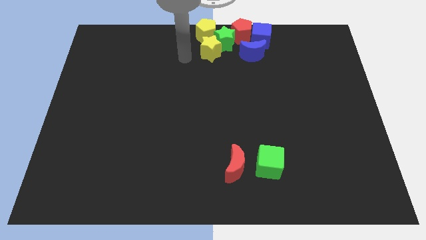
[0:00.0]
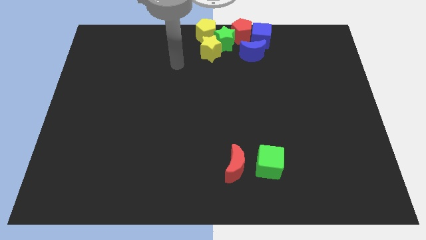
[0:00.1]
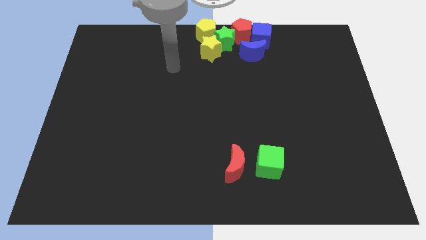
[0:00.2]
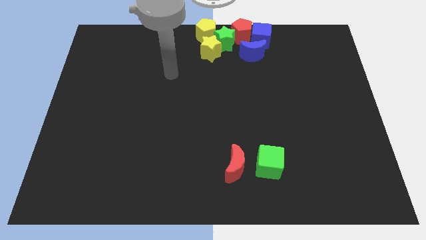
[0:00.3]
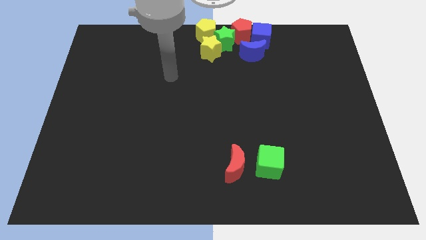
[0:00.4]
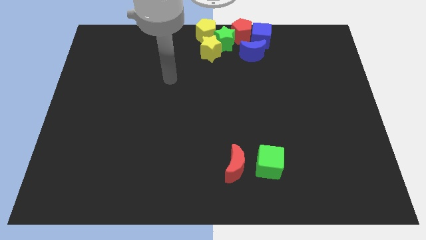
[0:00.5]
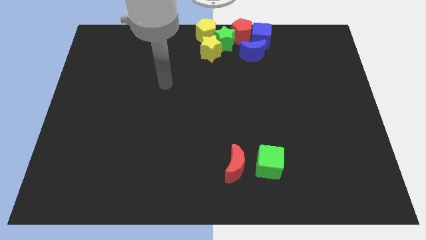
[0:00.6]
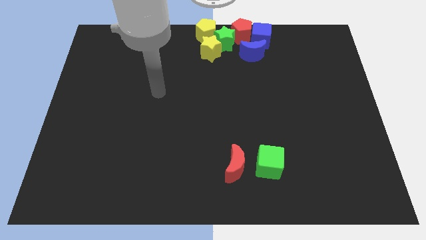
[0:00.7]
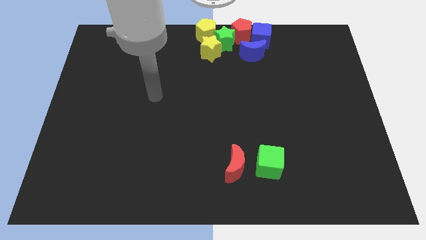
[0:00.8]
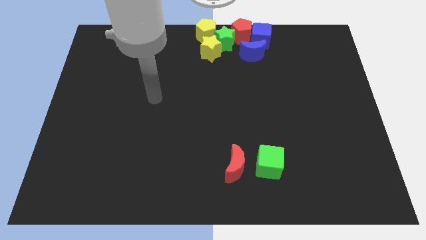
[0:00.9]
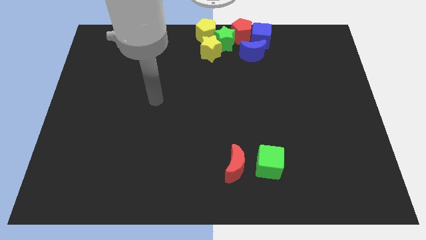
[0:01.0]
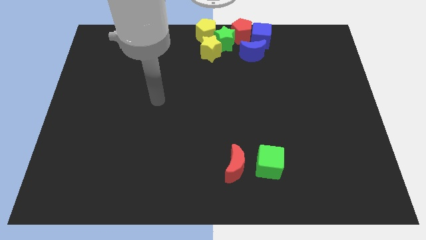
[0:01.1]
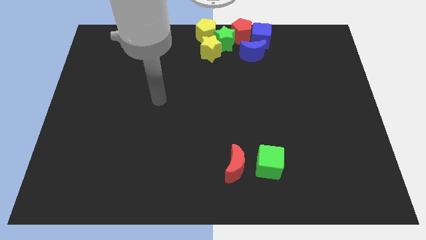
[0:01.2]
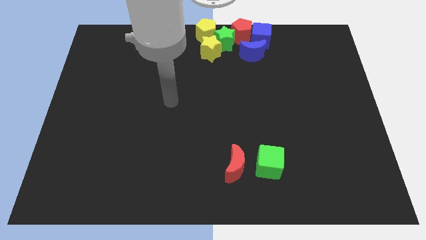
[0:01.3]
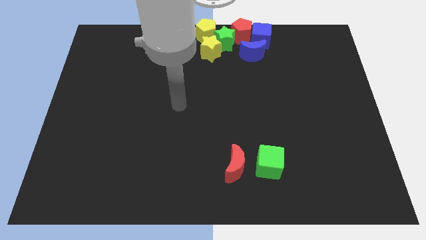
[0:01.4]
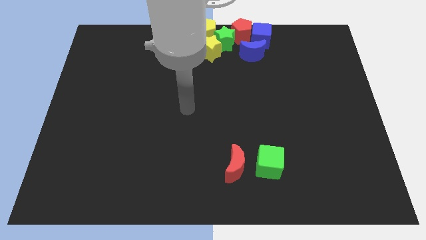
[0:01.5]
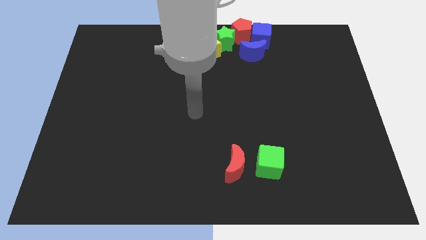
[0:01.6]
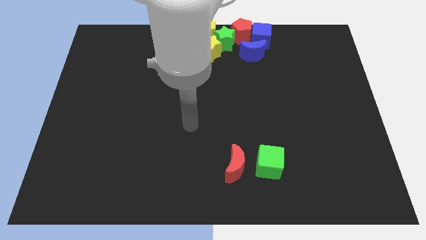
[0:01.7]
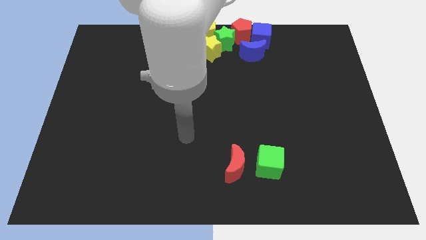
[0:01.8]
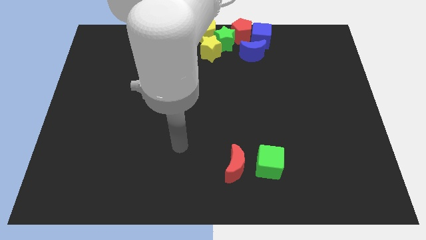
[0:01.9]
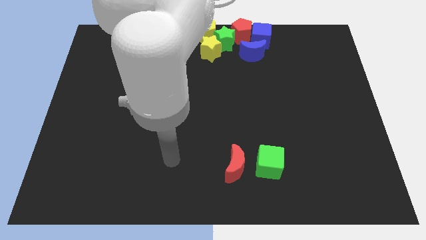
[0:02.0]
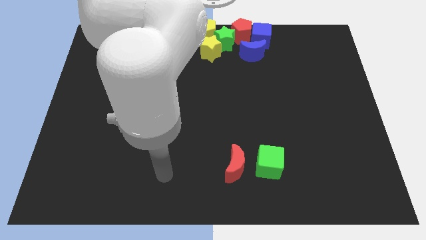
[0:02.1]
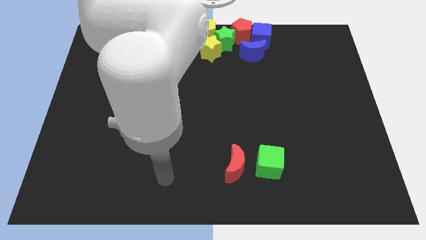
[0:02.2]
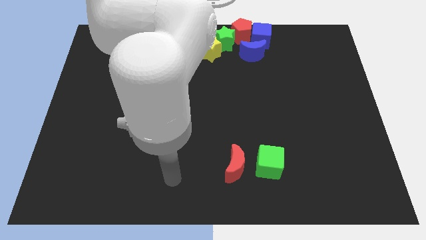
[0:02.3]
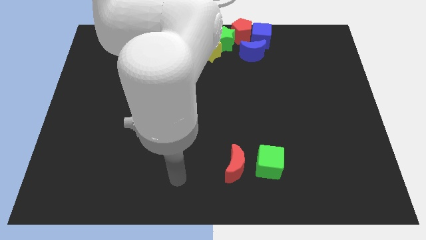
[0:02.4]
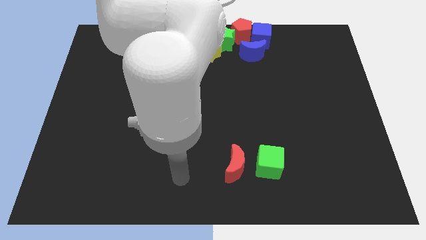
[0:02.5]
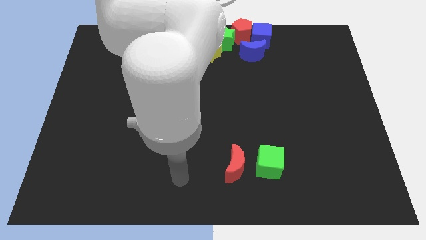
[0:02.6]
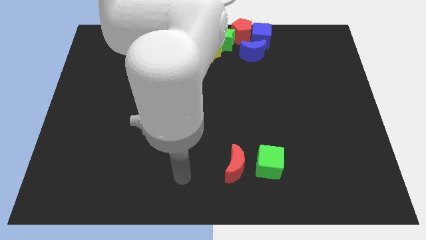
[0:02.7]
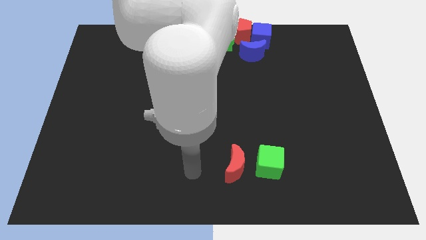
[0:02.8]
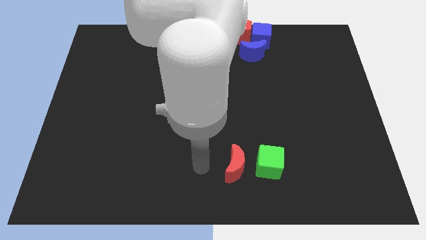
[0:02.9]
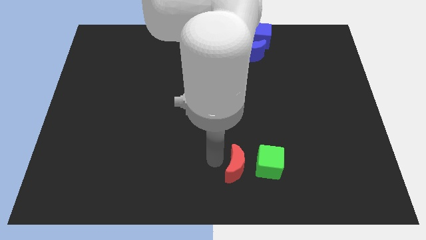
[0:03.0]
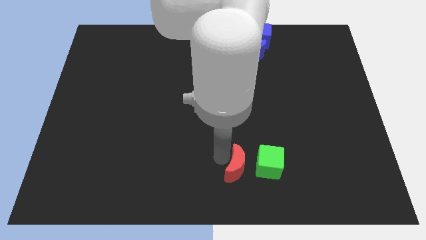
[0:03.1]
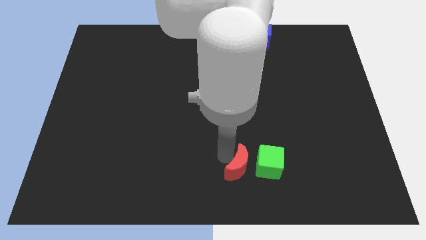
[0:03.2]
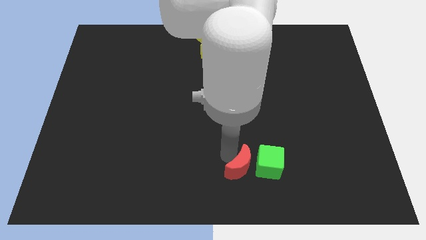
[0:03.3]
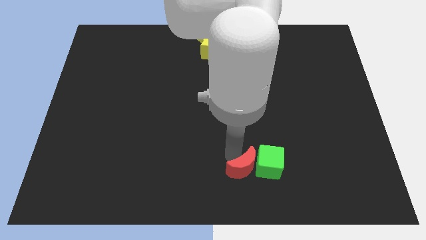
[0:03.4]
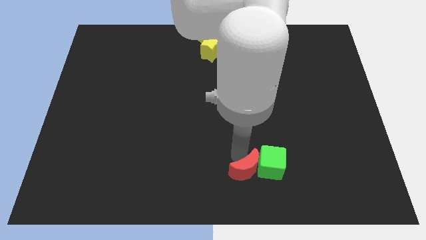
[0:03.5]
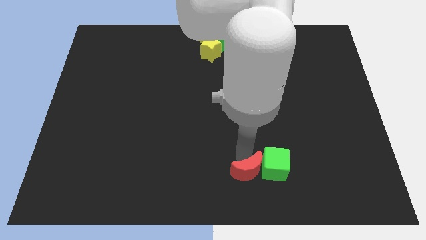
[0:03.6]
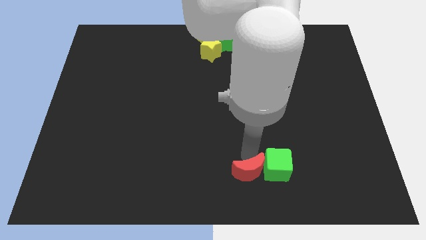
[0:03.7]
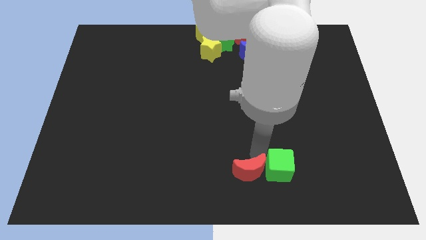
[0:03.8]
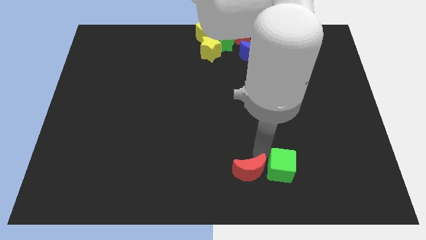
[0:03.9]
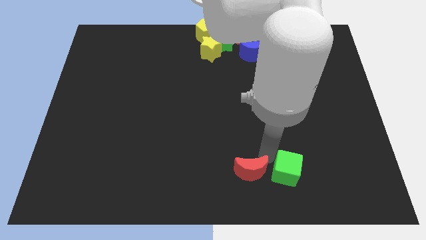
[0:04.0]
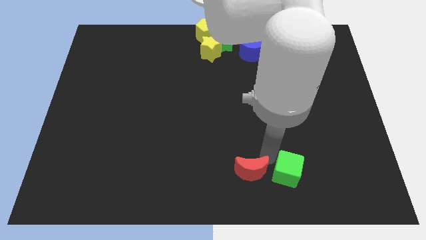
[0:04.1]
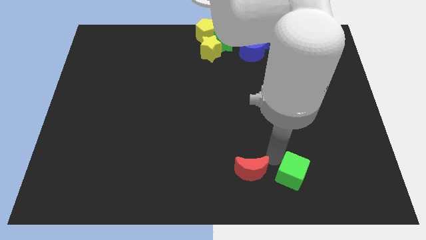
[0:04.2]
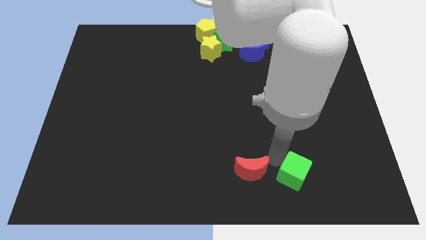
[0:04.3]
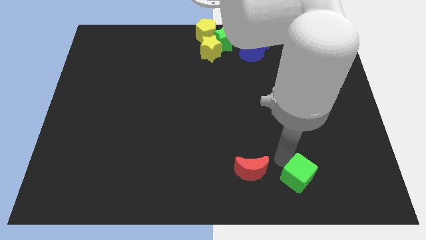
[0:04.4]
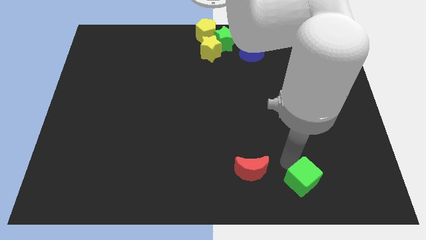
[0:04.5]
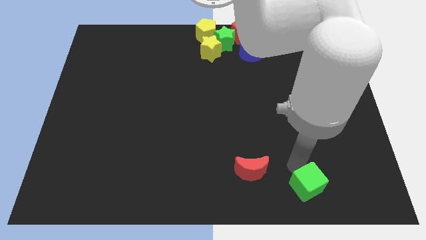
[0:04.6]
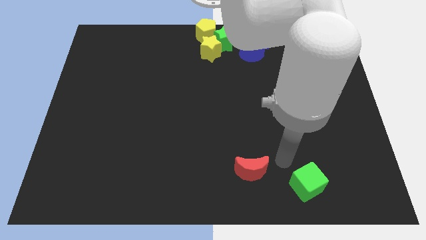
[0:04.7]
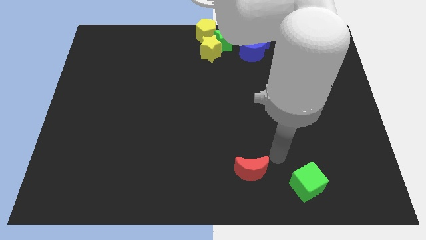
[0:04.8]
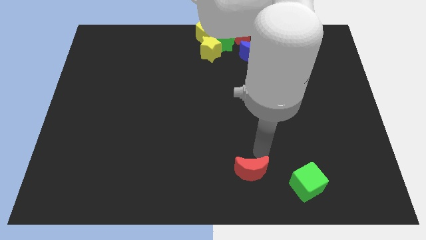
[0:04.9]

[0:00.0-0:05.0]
place your arm to the right side of the green star

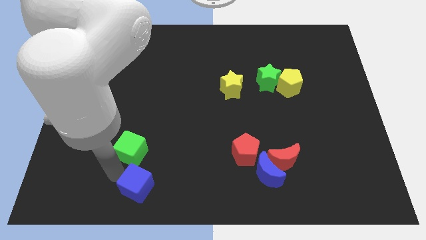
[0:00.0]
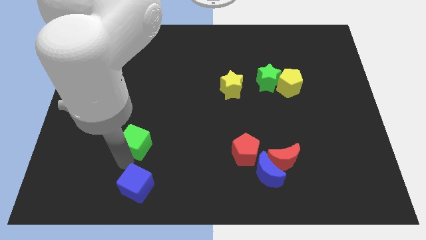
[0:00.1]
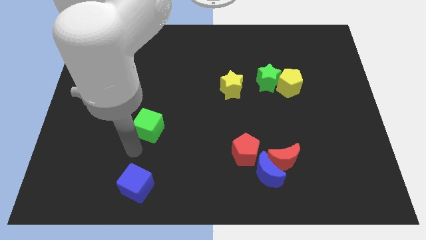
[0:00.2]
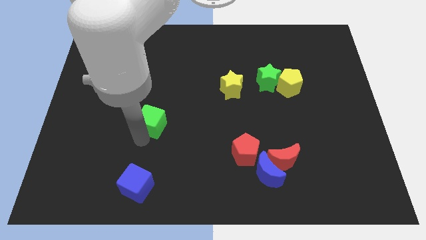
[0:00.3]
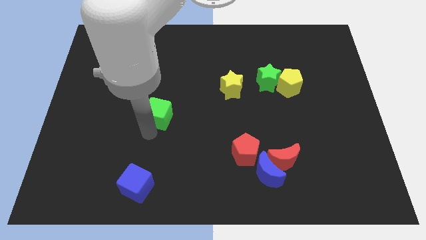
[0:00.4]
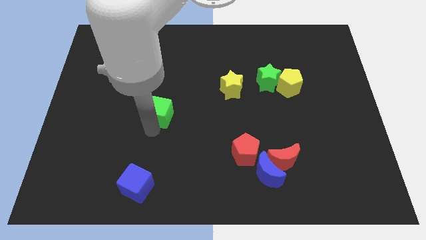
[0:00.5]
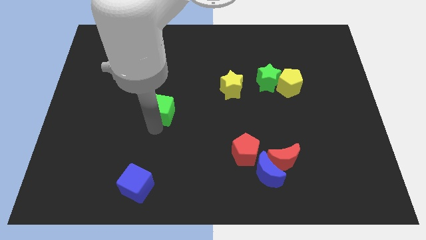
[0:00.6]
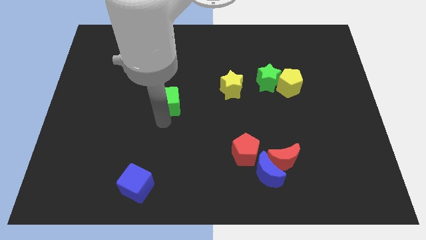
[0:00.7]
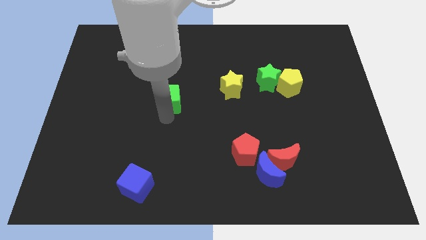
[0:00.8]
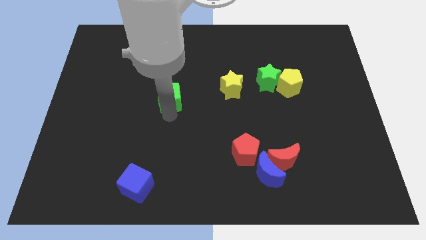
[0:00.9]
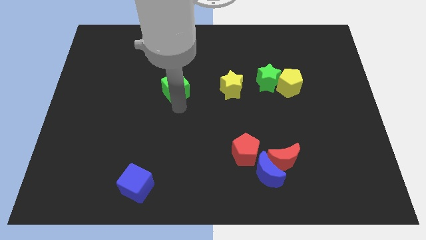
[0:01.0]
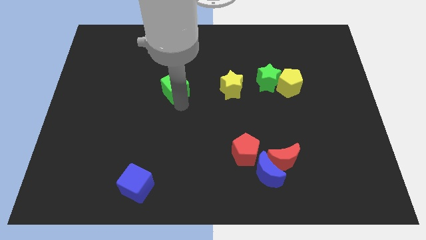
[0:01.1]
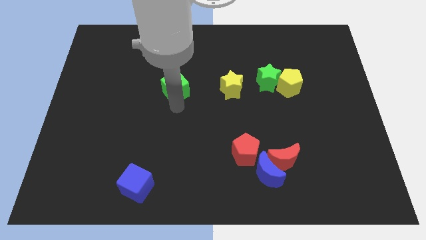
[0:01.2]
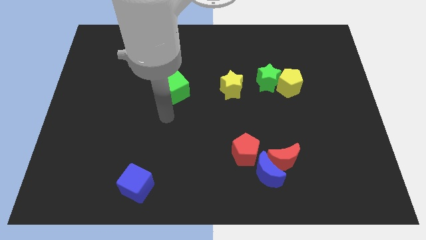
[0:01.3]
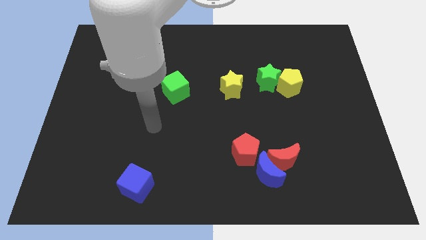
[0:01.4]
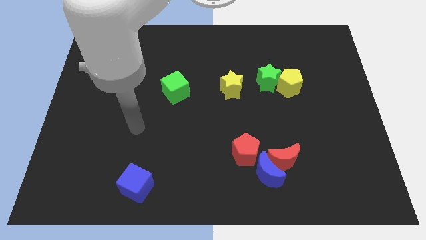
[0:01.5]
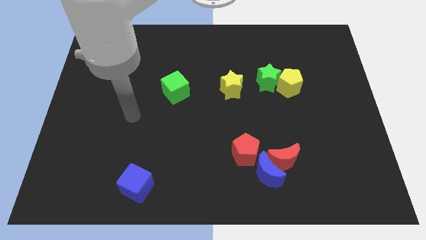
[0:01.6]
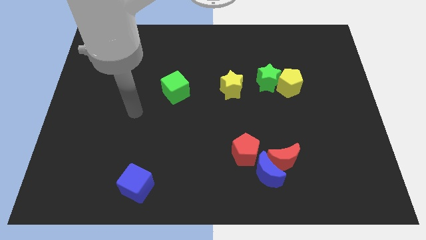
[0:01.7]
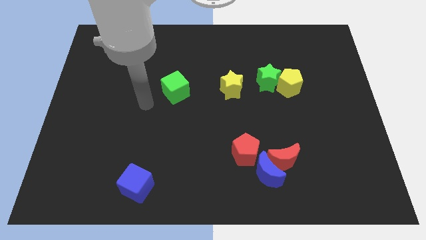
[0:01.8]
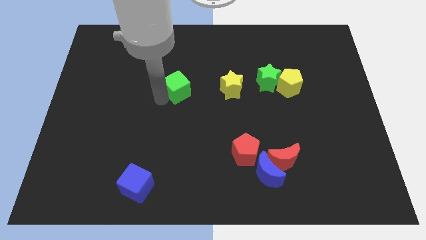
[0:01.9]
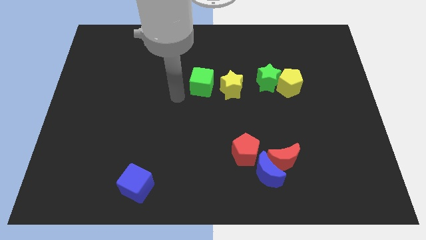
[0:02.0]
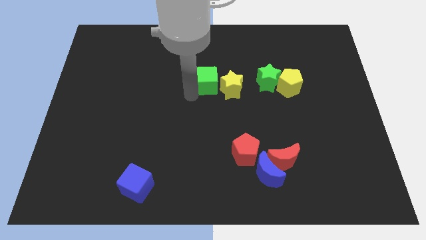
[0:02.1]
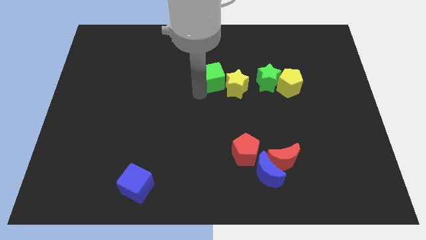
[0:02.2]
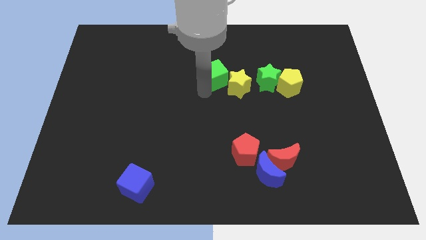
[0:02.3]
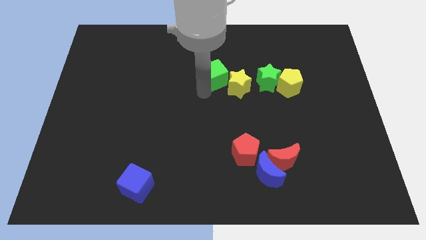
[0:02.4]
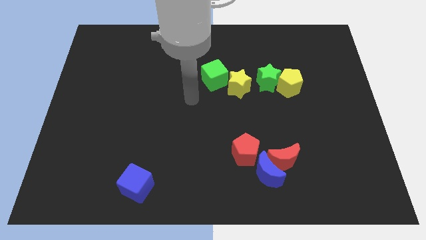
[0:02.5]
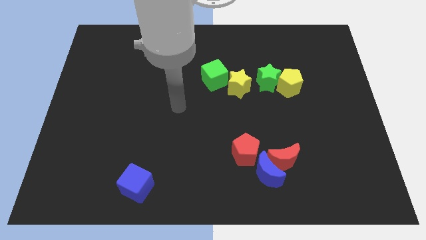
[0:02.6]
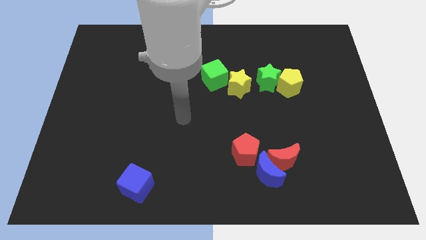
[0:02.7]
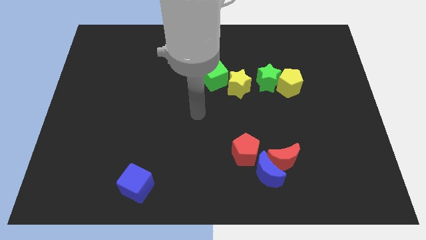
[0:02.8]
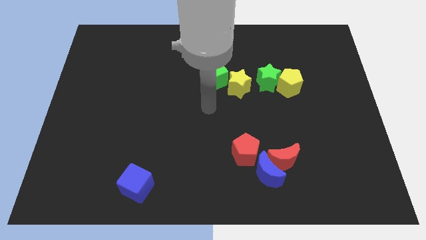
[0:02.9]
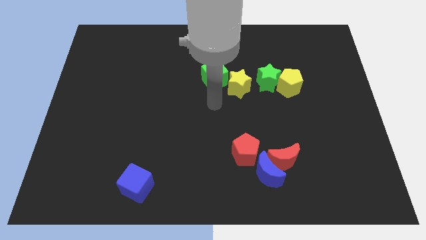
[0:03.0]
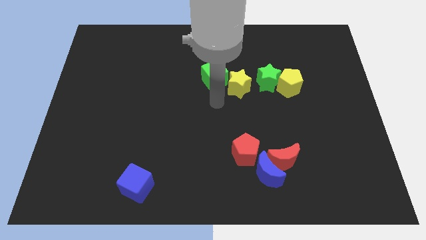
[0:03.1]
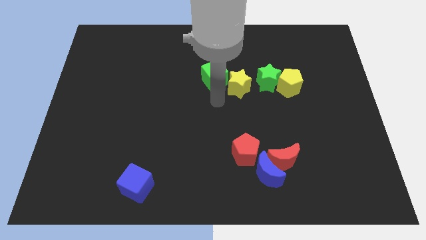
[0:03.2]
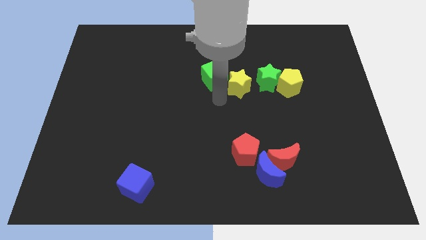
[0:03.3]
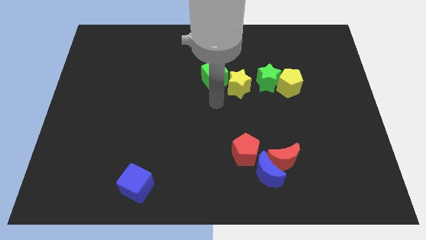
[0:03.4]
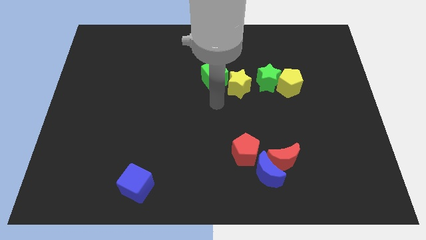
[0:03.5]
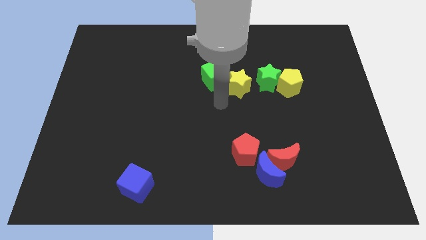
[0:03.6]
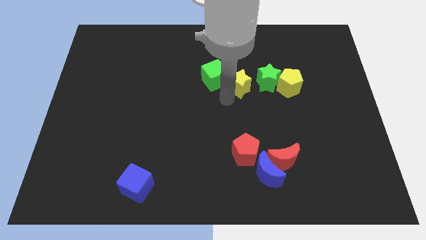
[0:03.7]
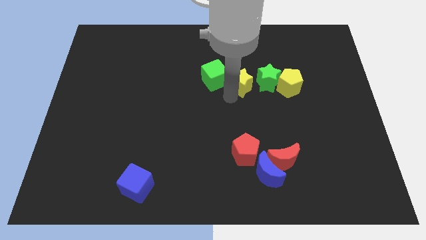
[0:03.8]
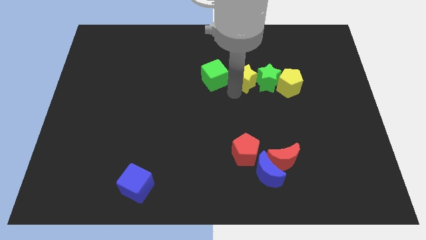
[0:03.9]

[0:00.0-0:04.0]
push the green cube into the yellow star
